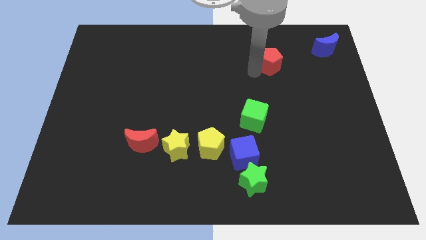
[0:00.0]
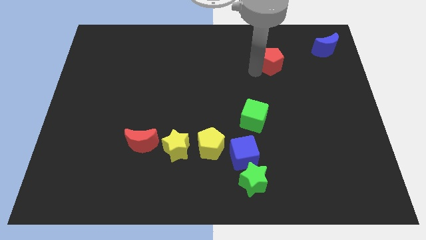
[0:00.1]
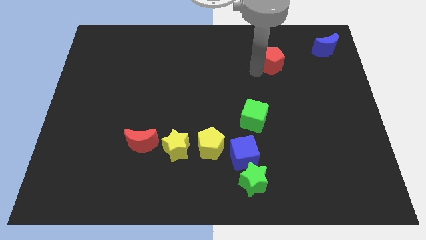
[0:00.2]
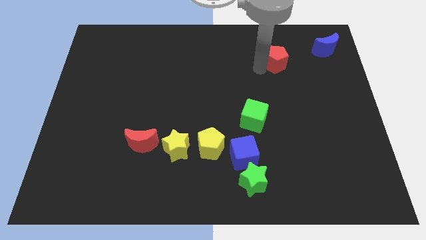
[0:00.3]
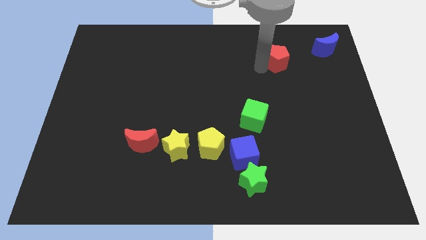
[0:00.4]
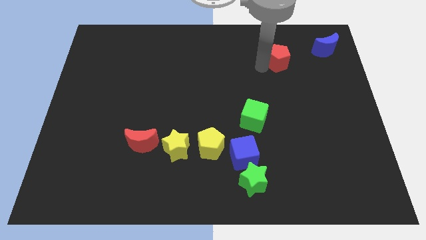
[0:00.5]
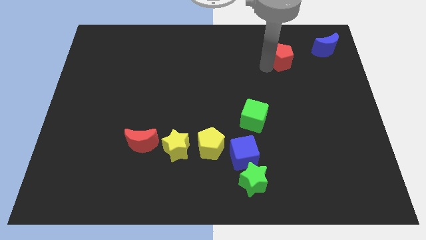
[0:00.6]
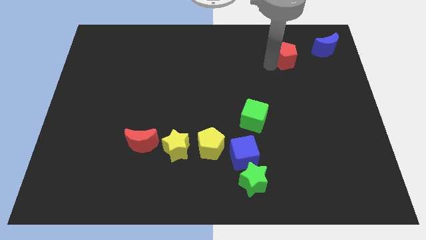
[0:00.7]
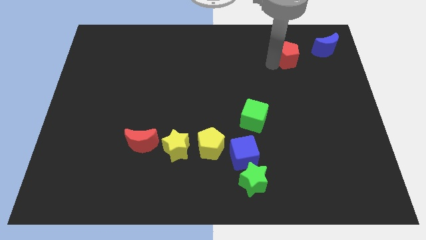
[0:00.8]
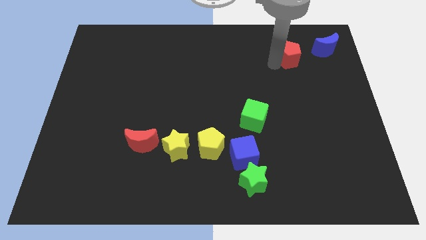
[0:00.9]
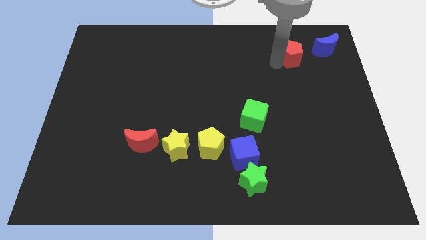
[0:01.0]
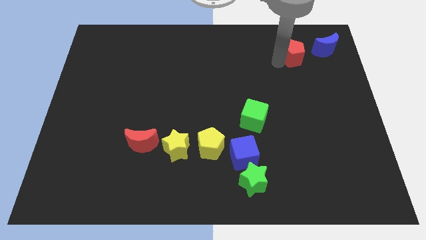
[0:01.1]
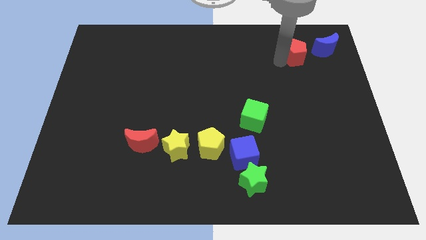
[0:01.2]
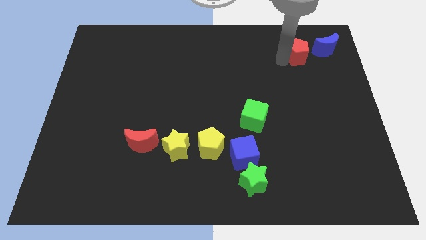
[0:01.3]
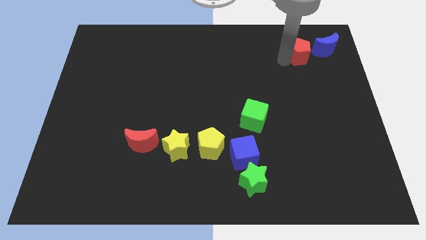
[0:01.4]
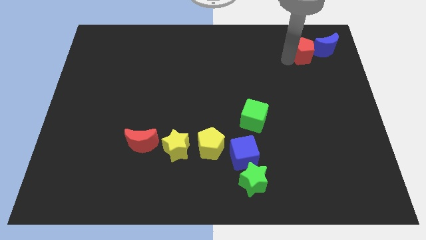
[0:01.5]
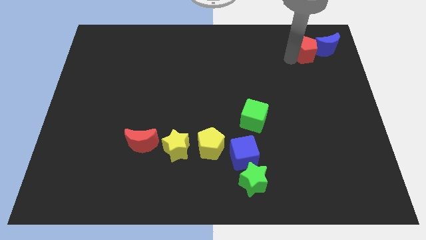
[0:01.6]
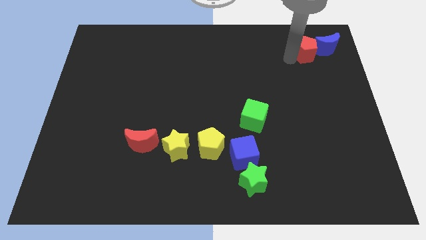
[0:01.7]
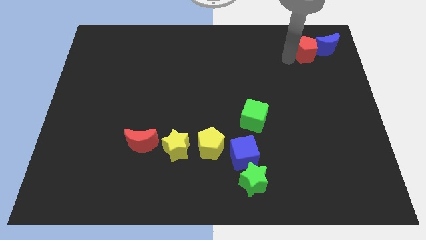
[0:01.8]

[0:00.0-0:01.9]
push the red pentagon into the blue crescent

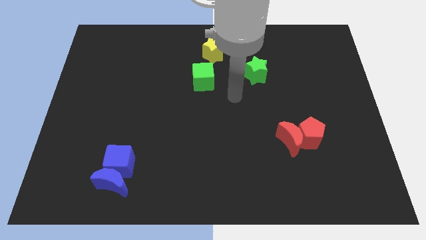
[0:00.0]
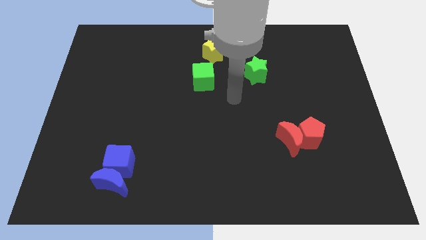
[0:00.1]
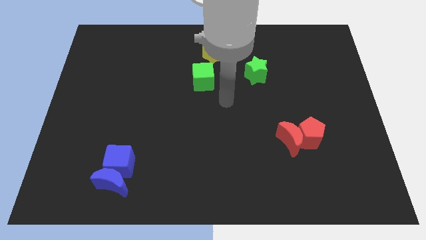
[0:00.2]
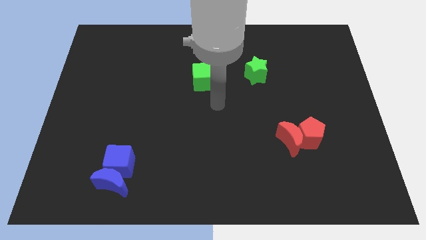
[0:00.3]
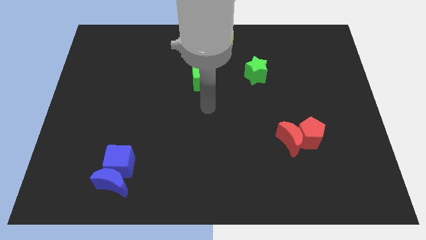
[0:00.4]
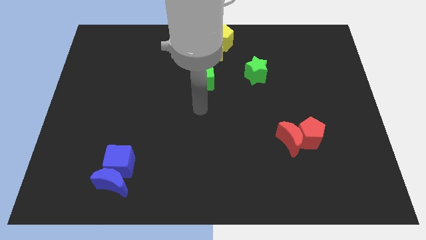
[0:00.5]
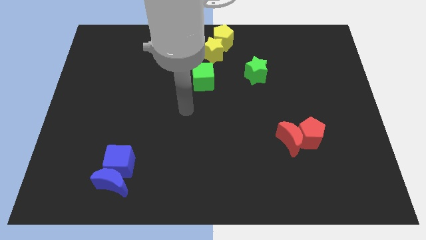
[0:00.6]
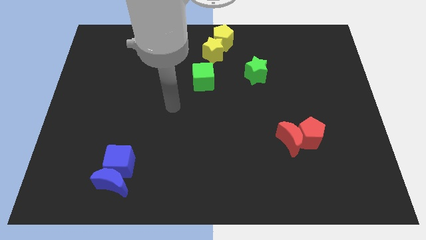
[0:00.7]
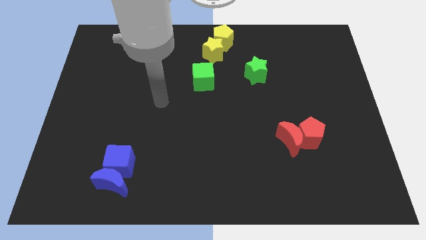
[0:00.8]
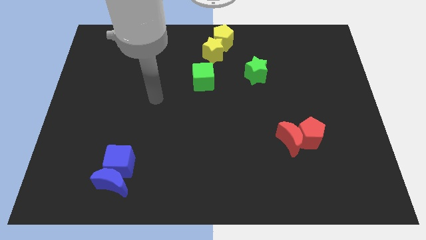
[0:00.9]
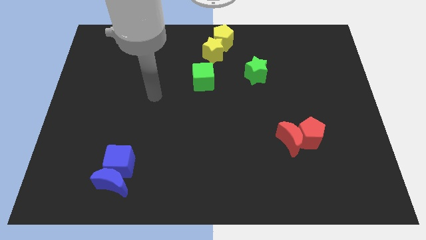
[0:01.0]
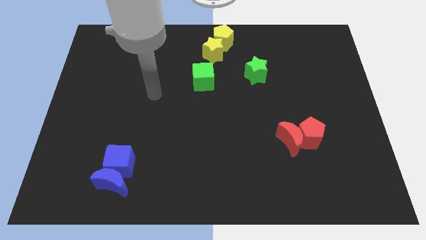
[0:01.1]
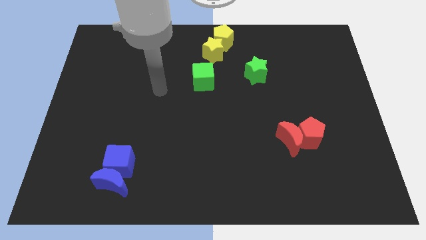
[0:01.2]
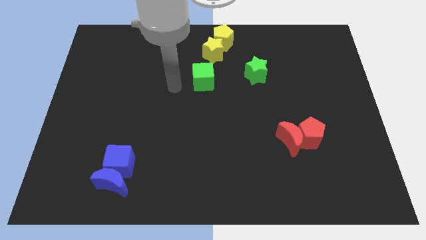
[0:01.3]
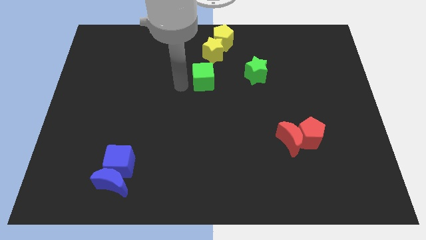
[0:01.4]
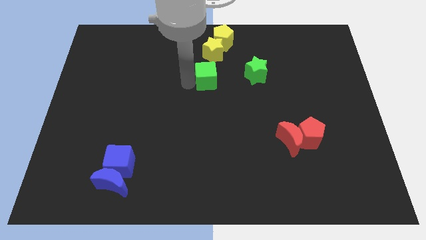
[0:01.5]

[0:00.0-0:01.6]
tap the green cube

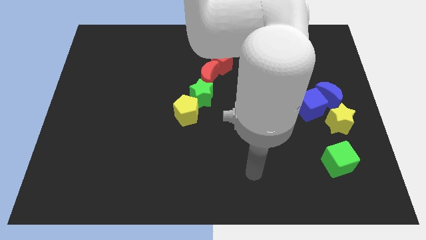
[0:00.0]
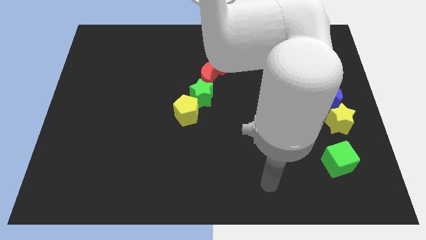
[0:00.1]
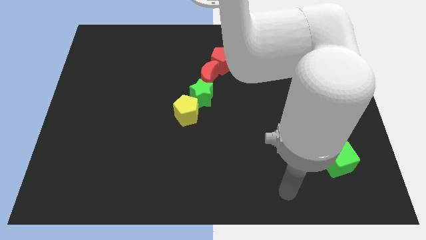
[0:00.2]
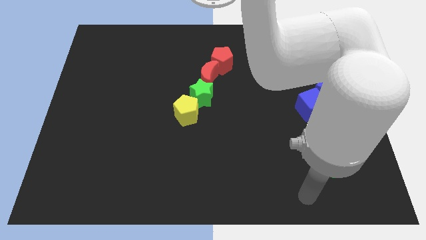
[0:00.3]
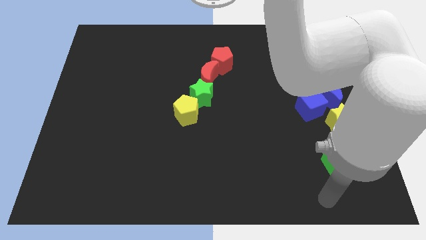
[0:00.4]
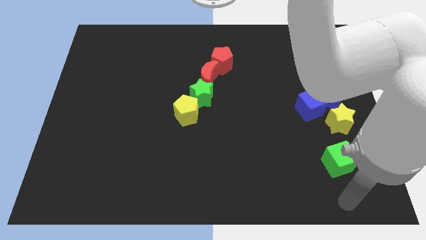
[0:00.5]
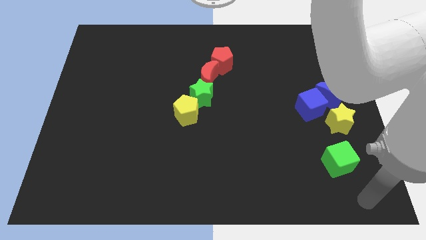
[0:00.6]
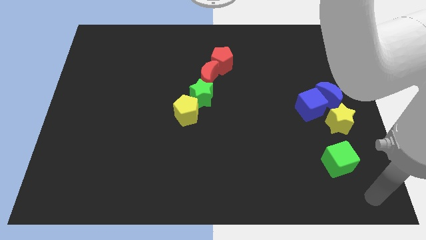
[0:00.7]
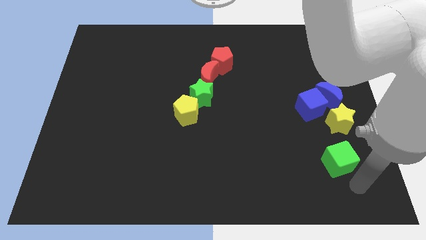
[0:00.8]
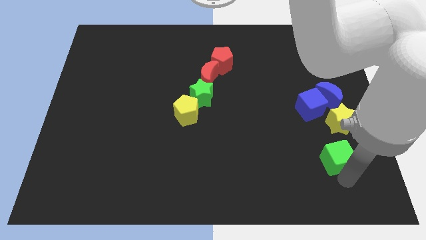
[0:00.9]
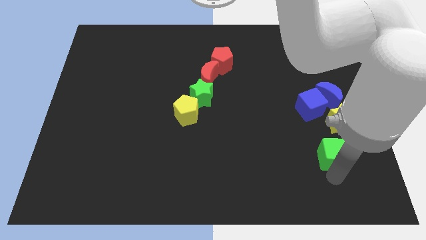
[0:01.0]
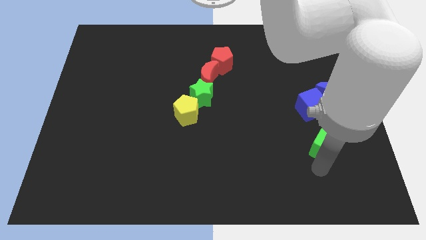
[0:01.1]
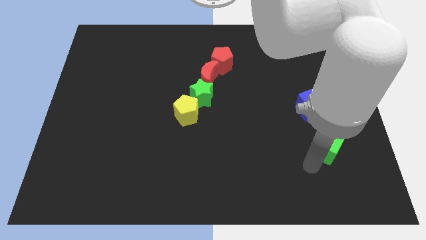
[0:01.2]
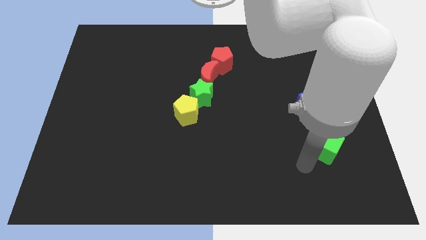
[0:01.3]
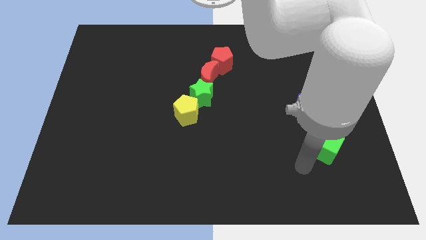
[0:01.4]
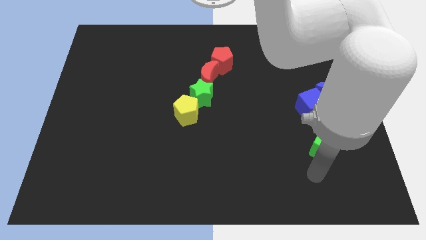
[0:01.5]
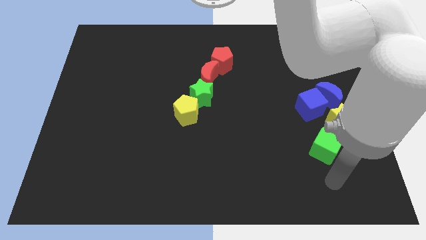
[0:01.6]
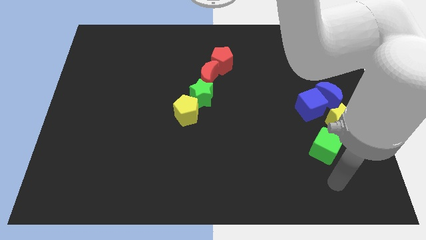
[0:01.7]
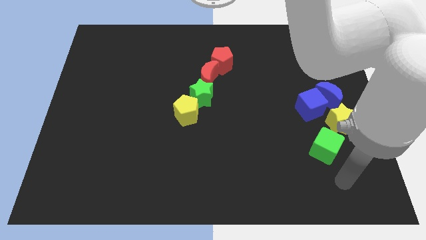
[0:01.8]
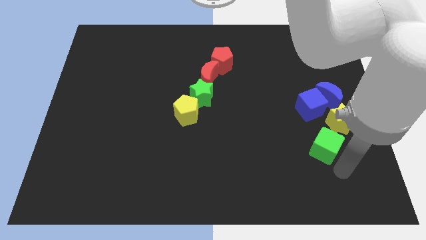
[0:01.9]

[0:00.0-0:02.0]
push the green cube diagonal to the yellow star

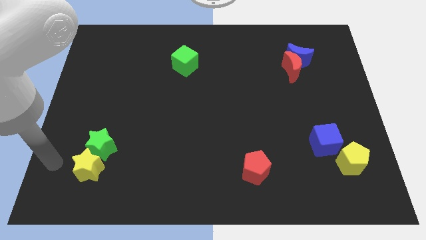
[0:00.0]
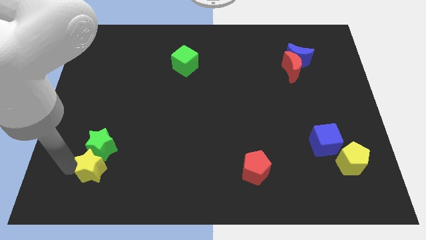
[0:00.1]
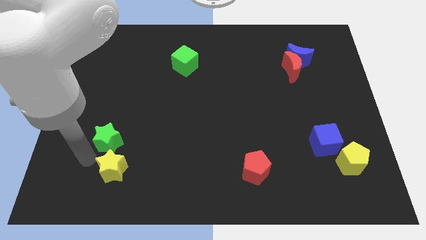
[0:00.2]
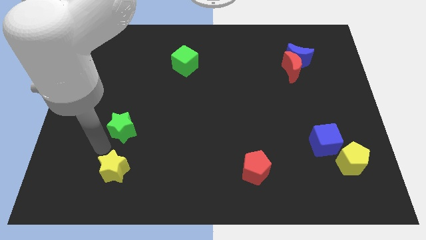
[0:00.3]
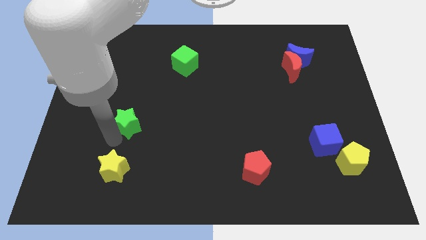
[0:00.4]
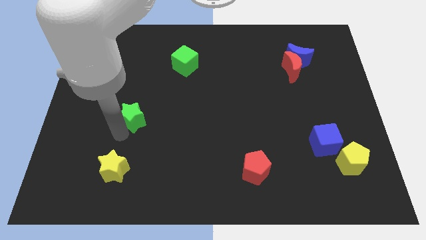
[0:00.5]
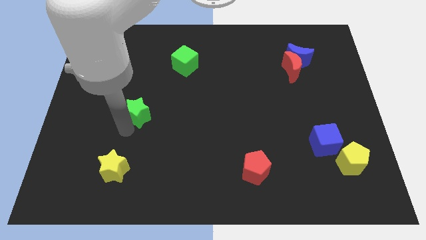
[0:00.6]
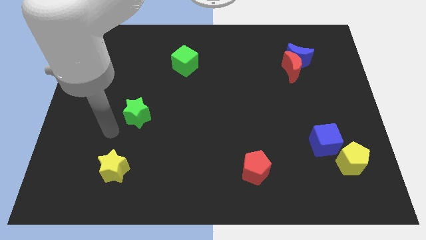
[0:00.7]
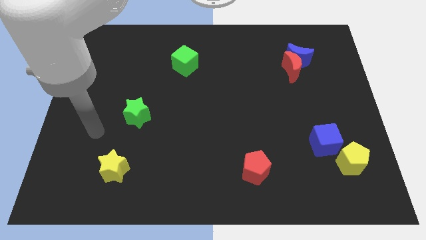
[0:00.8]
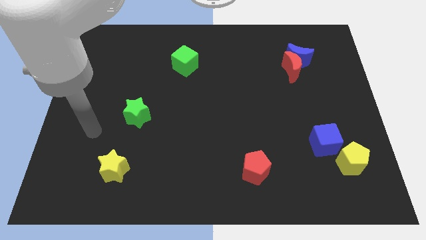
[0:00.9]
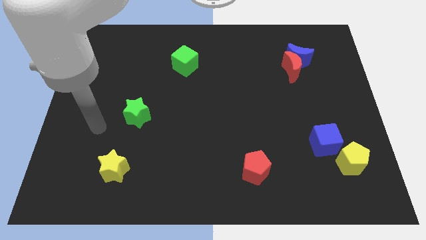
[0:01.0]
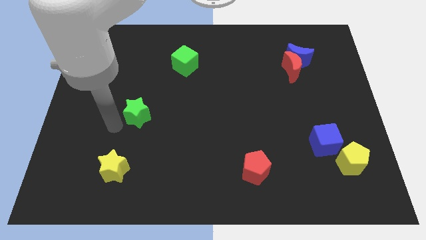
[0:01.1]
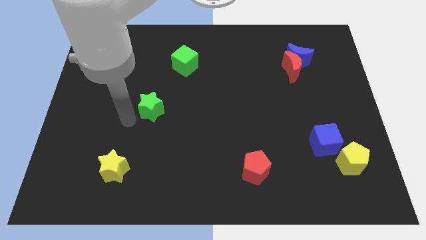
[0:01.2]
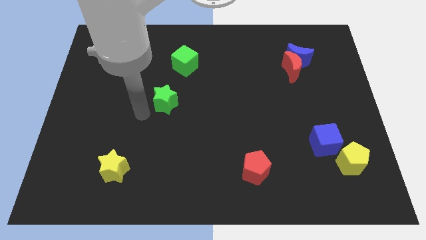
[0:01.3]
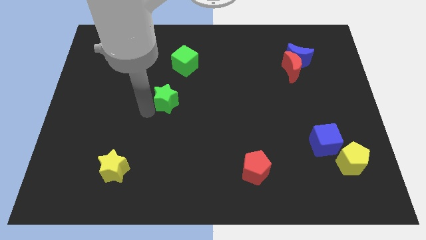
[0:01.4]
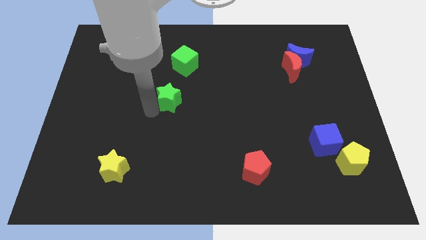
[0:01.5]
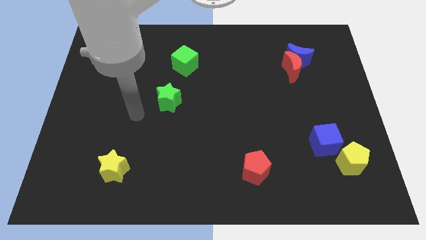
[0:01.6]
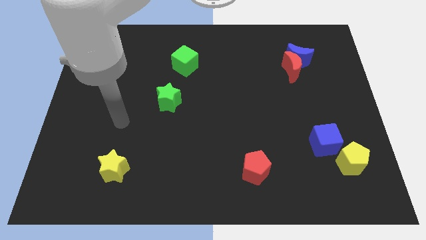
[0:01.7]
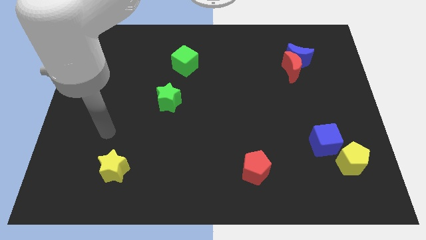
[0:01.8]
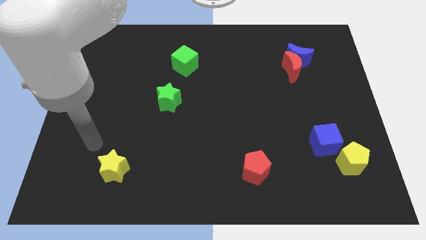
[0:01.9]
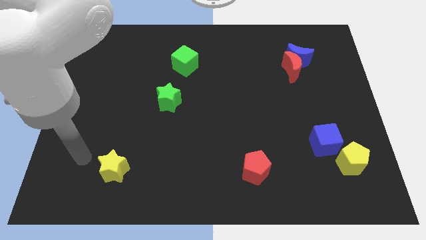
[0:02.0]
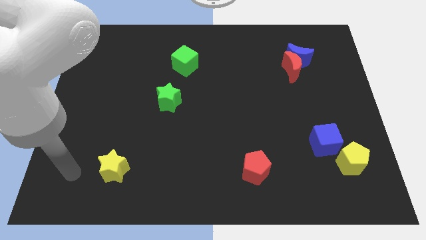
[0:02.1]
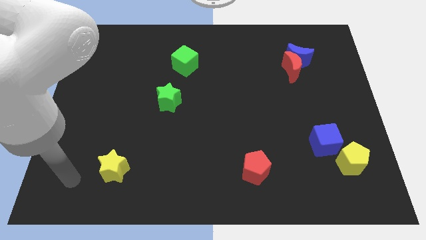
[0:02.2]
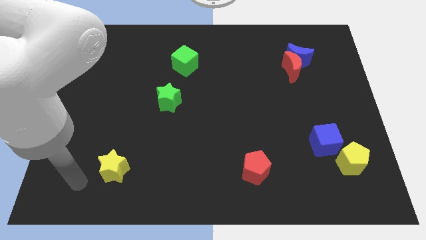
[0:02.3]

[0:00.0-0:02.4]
place green star a bit near to the green block

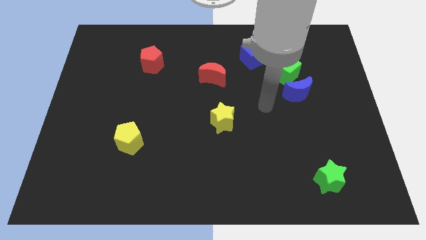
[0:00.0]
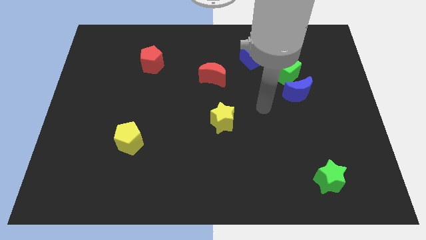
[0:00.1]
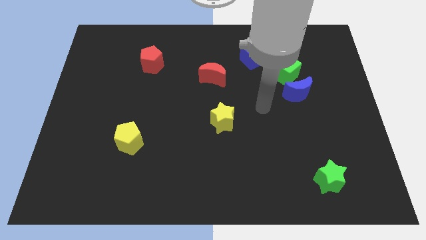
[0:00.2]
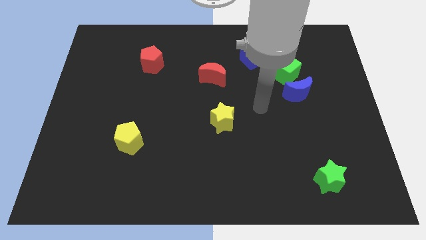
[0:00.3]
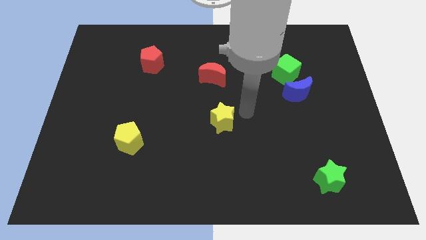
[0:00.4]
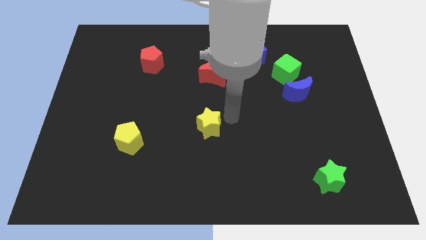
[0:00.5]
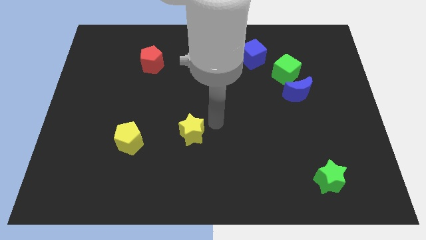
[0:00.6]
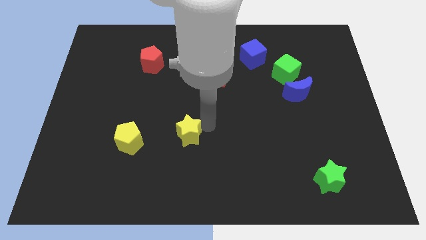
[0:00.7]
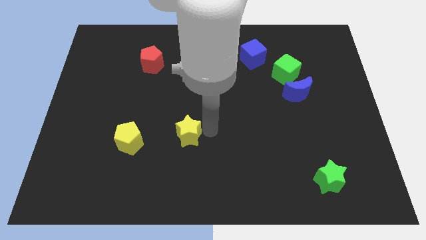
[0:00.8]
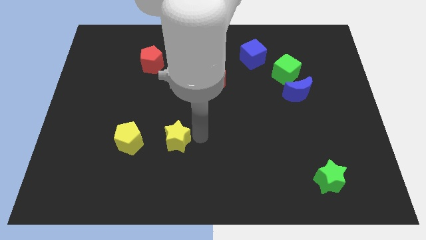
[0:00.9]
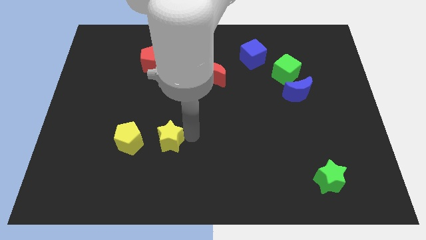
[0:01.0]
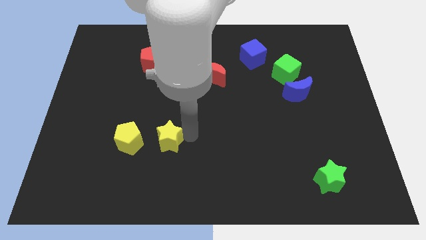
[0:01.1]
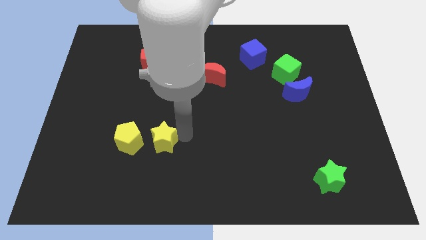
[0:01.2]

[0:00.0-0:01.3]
push the yellow star to the right of the yellow pentagon
